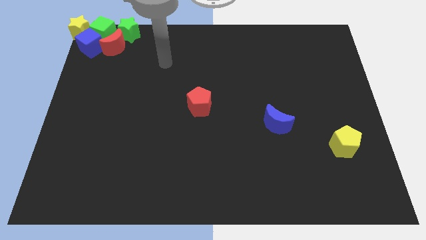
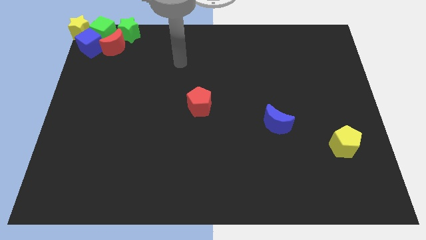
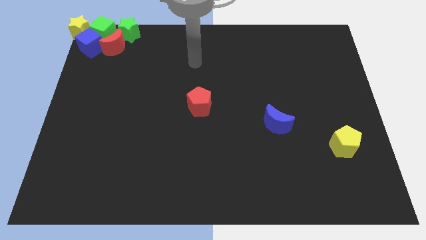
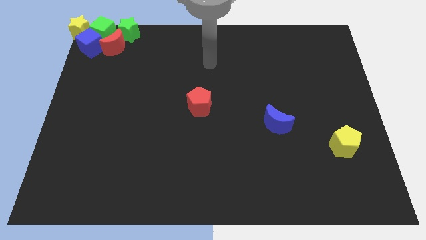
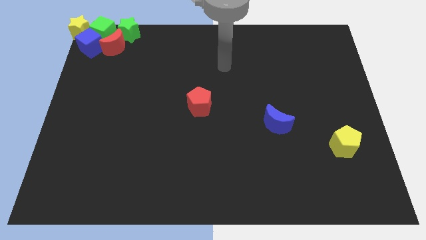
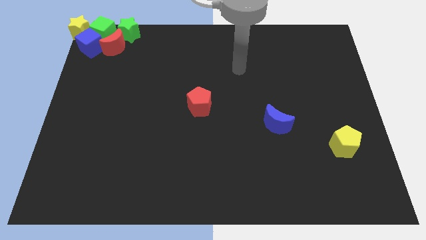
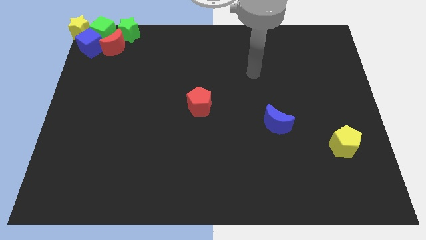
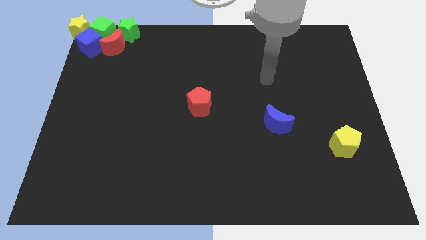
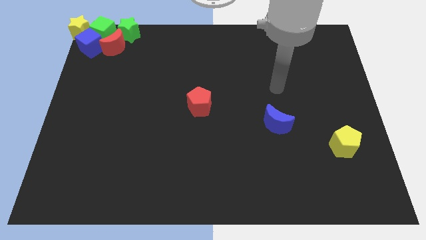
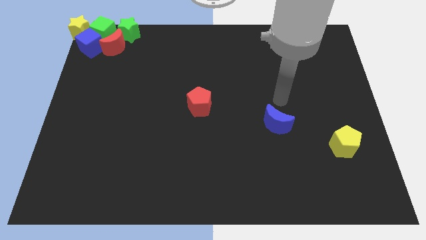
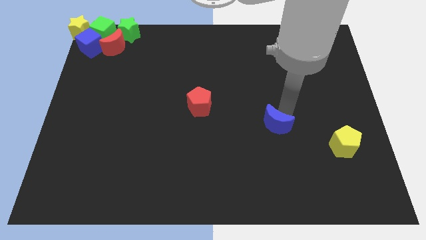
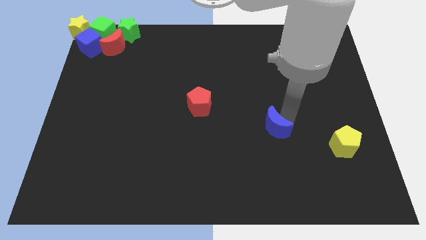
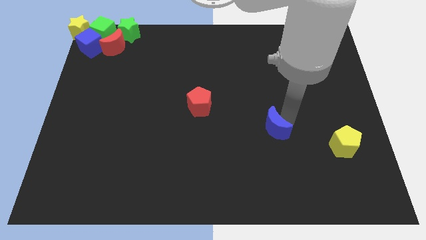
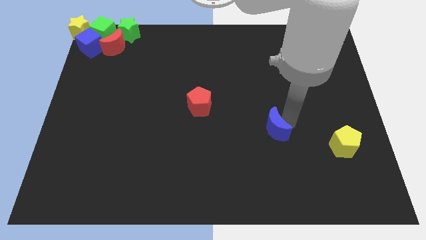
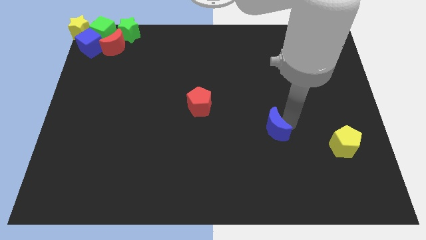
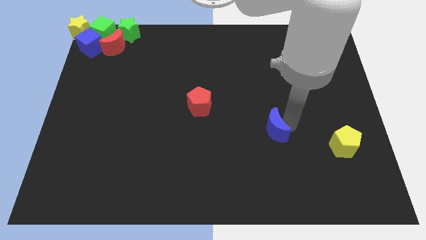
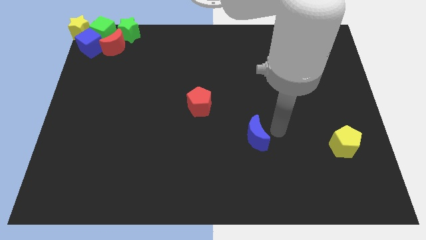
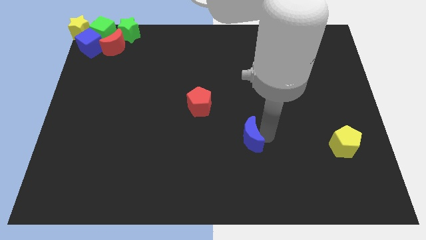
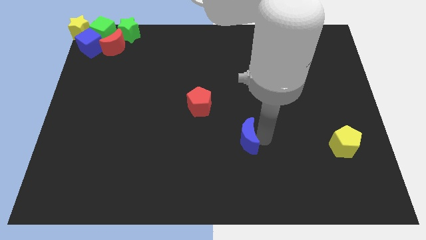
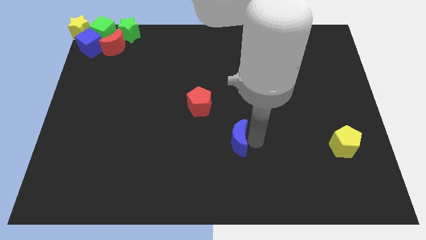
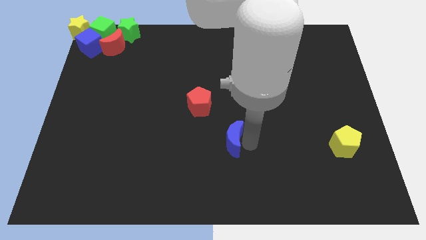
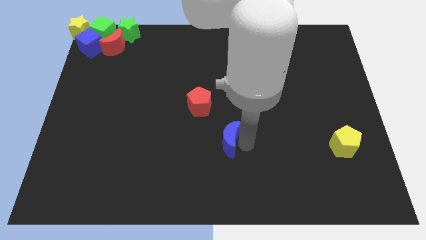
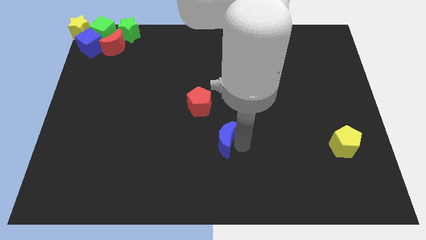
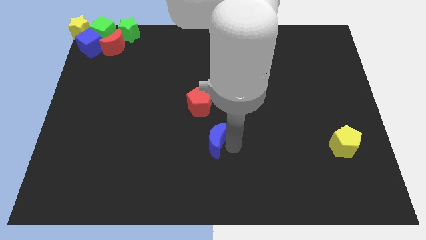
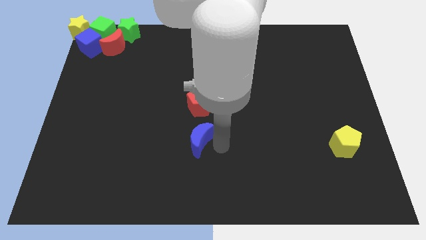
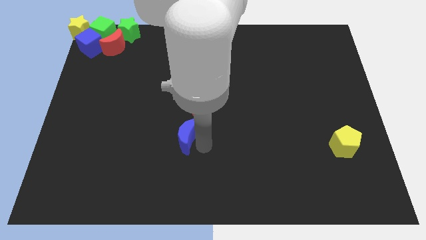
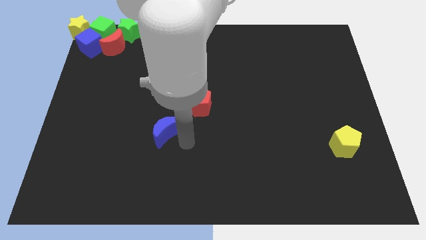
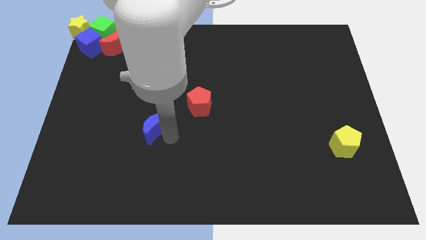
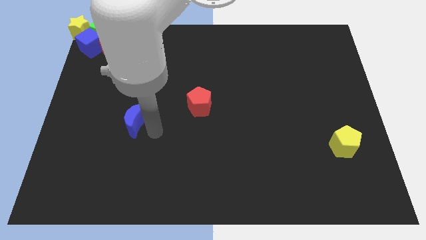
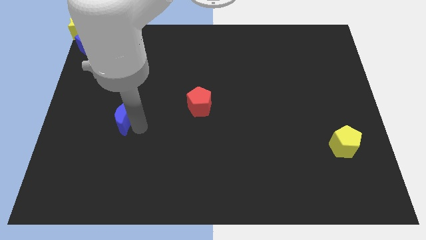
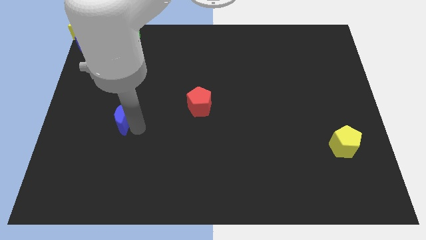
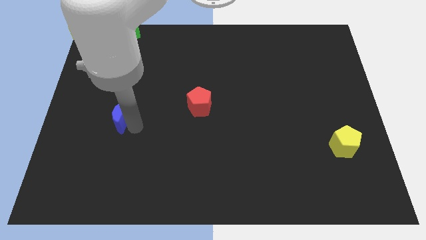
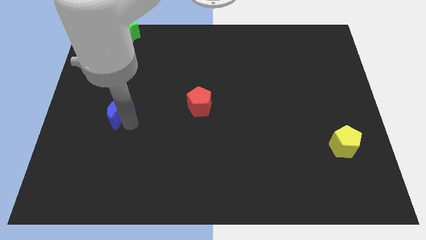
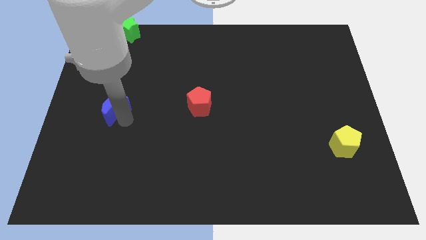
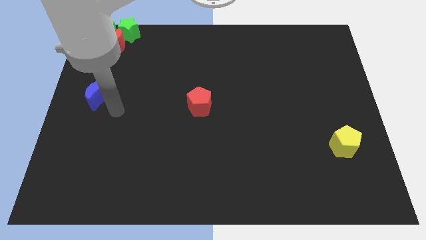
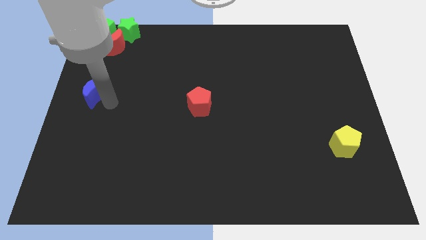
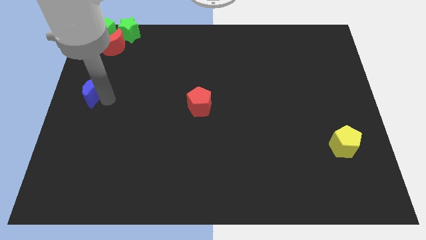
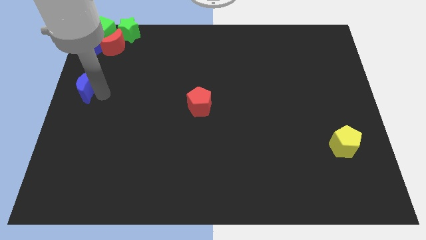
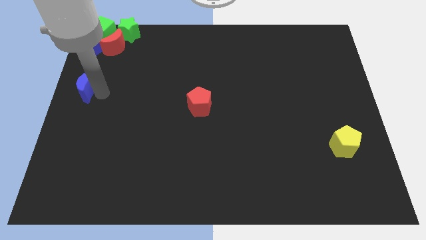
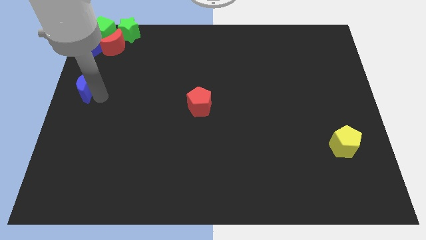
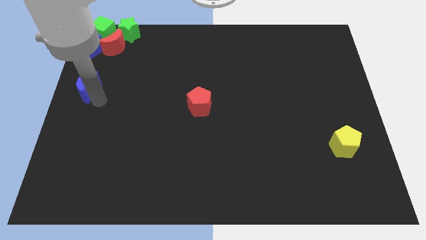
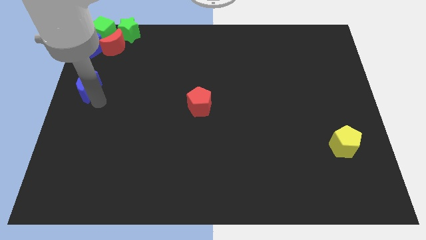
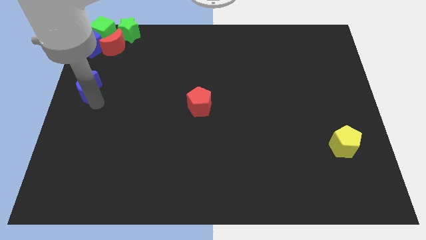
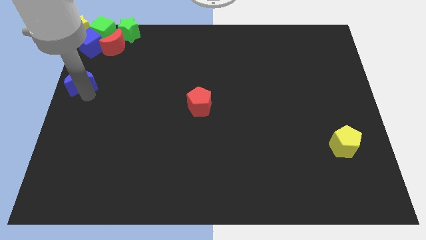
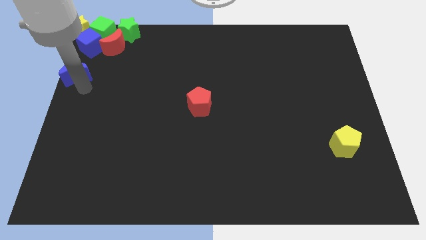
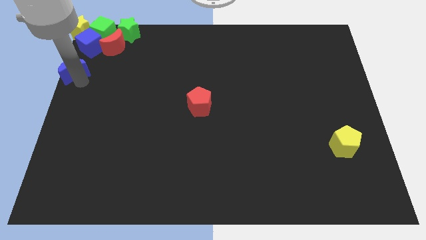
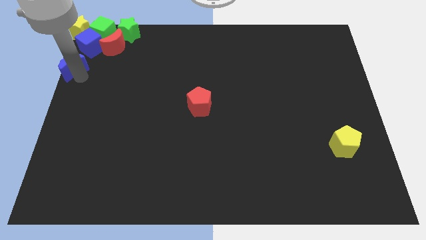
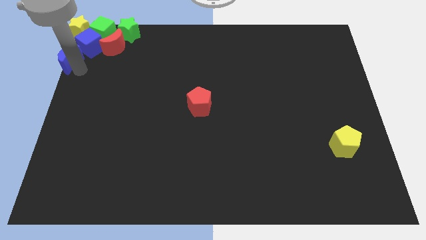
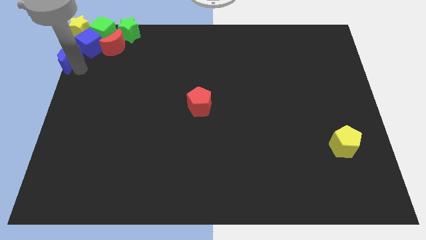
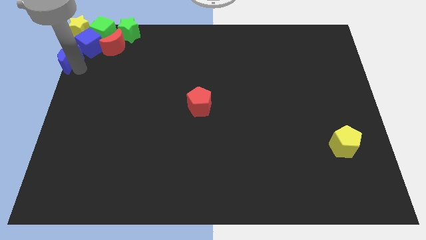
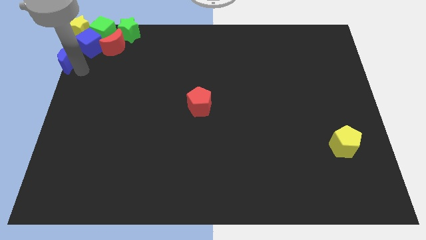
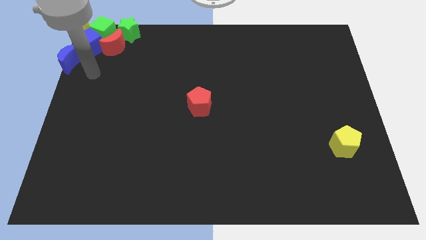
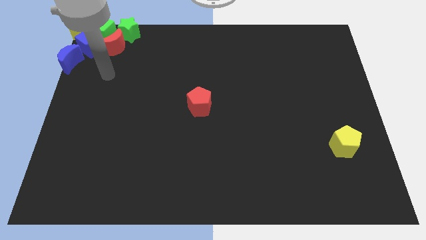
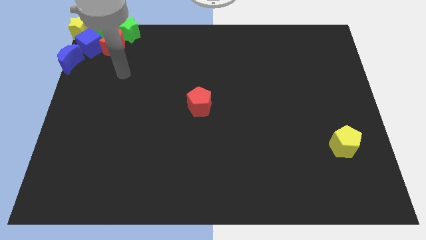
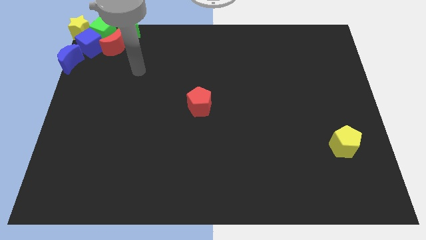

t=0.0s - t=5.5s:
push the blue crescent towards the bottom of the blue cube

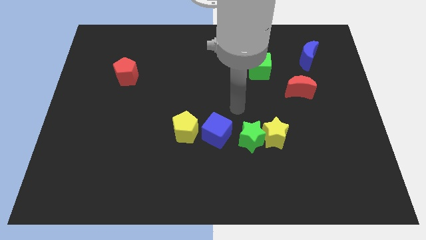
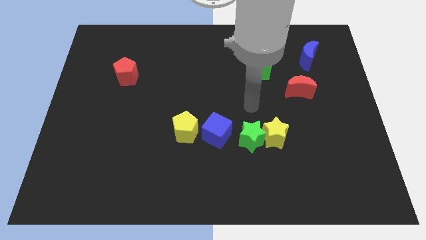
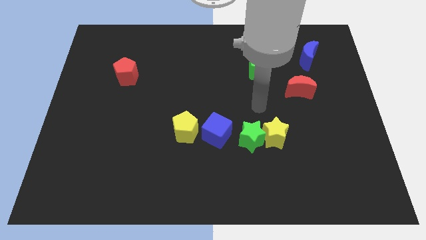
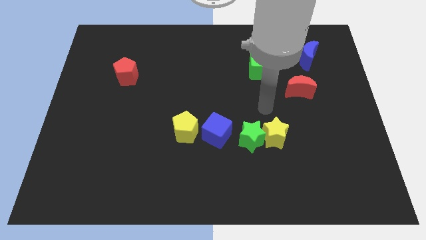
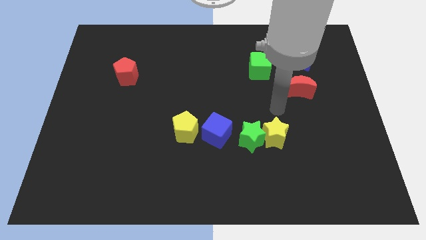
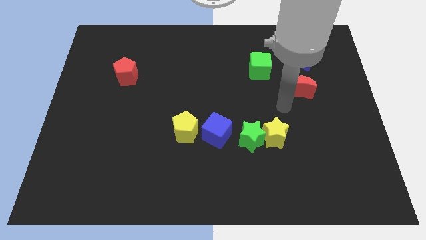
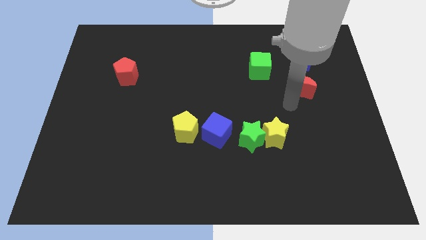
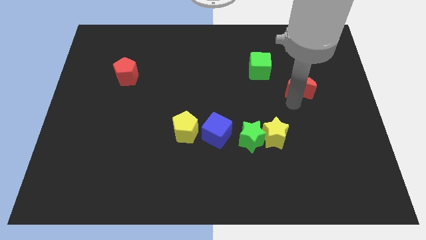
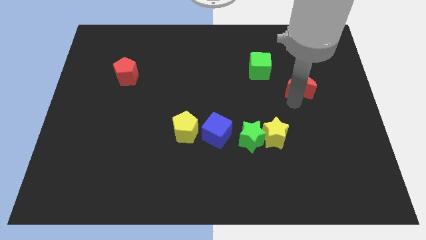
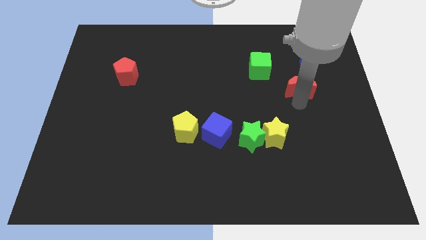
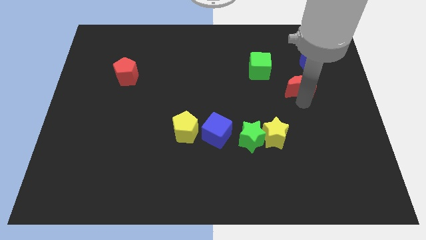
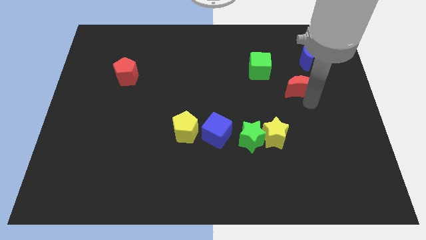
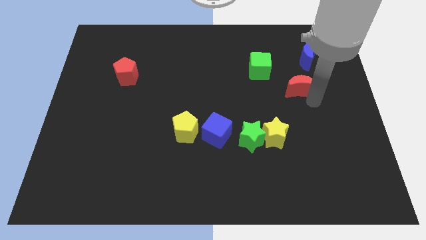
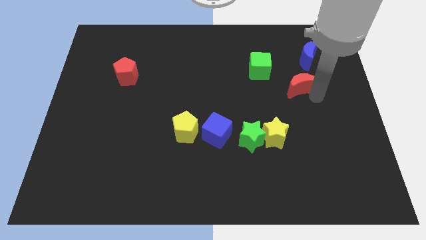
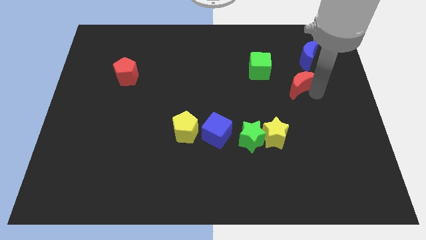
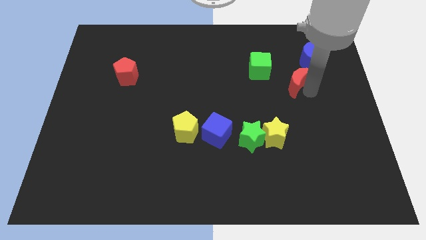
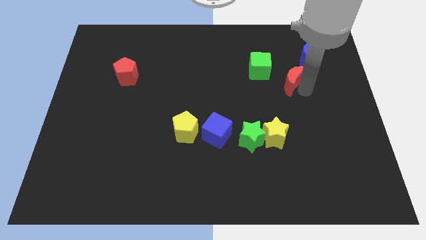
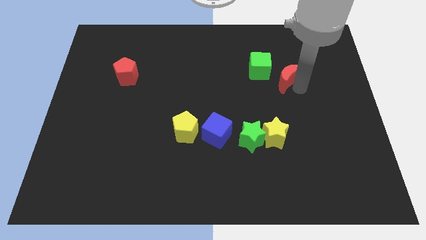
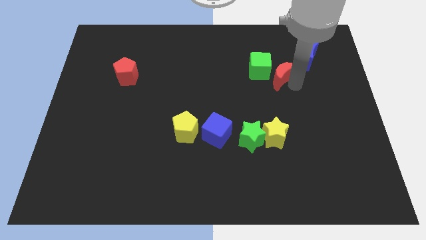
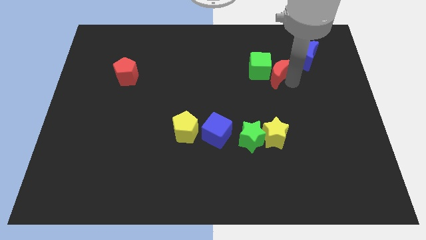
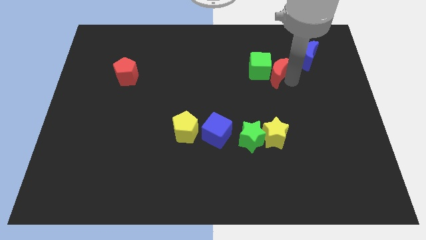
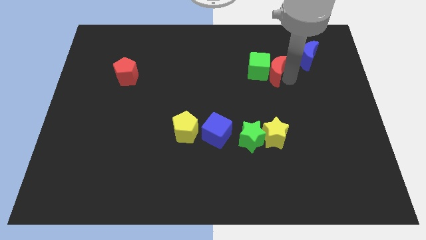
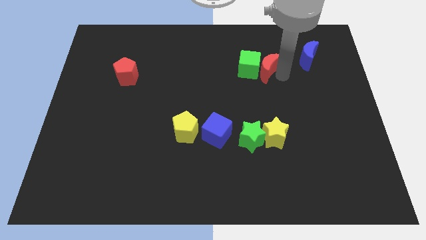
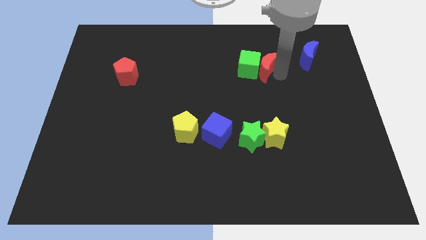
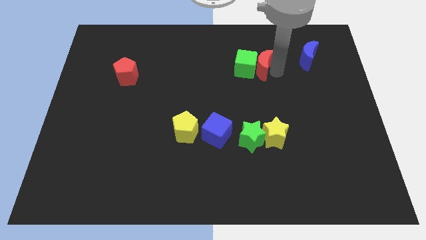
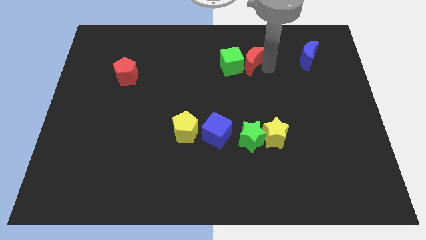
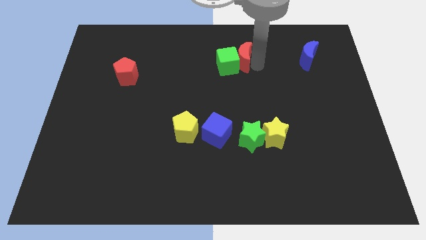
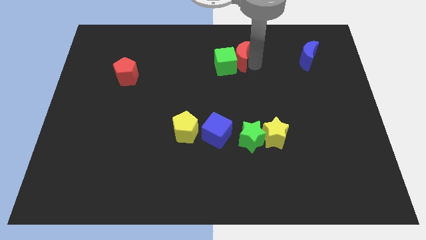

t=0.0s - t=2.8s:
push the red crescent in to green cube

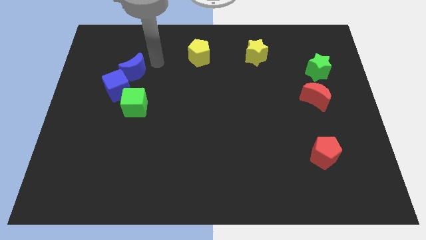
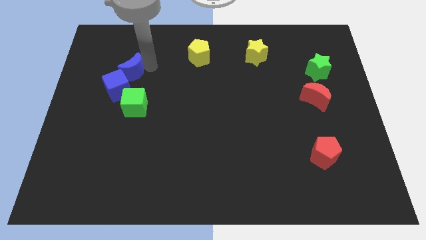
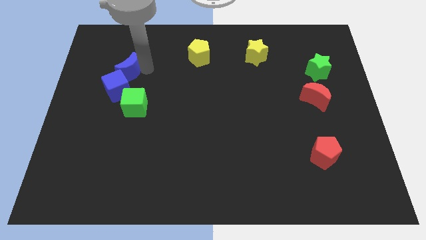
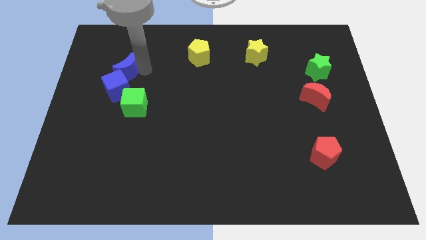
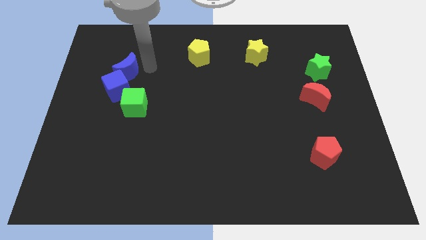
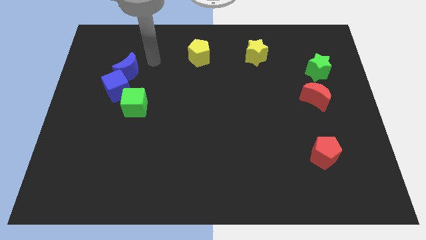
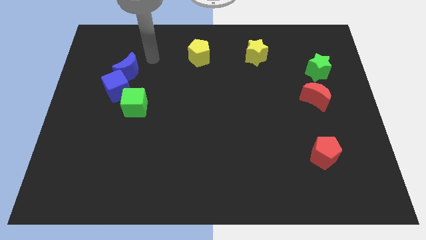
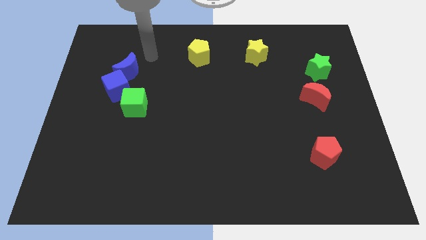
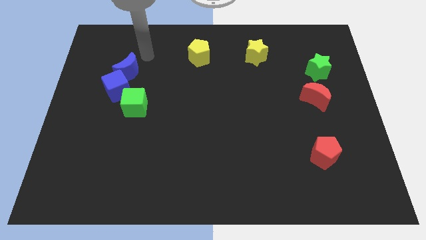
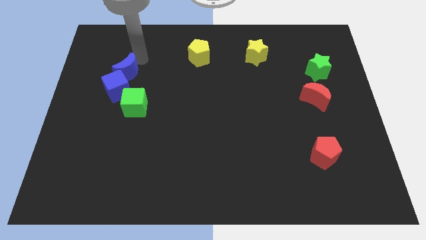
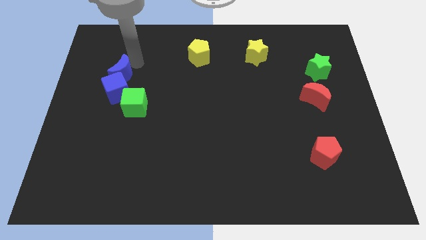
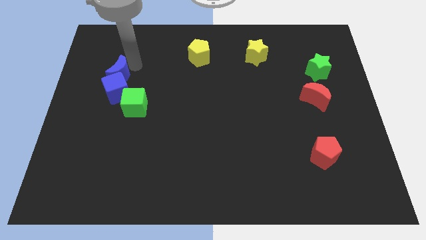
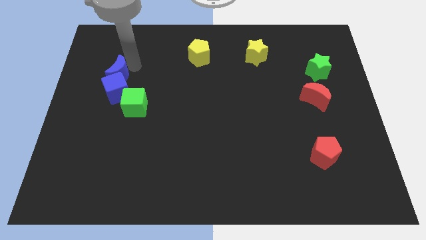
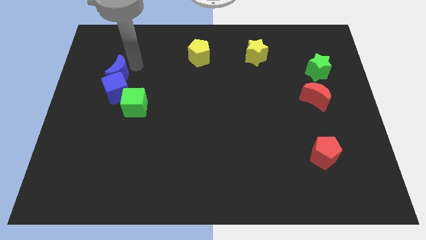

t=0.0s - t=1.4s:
move the blue crescent above the blue cube
